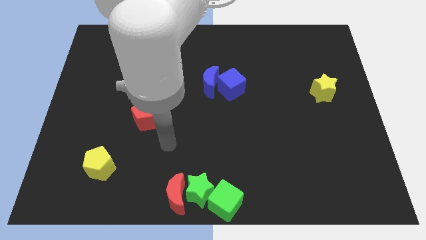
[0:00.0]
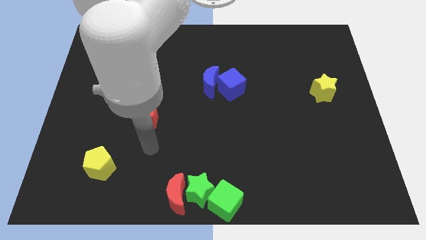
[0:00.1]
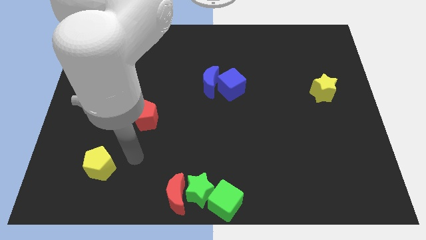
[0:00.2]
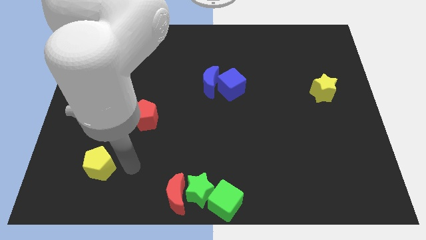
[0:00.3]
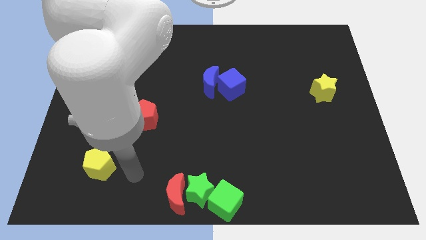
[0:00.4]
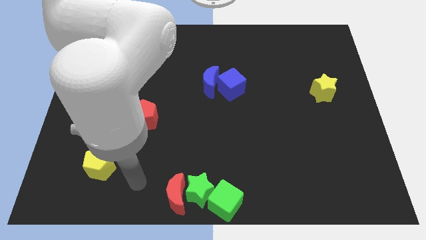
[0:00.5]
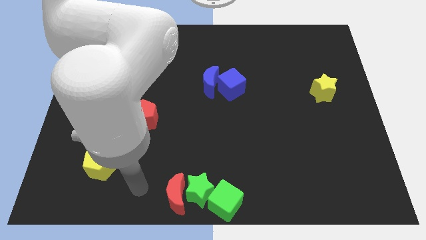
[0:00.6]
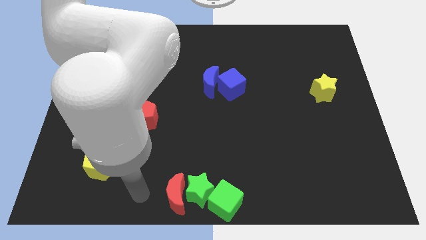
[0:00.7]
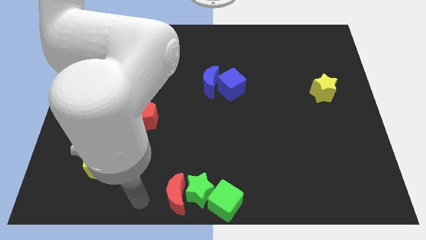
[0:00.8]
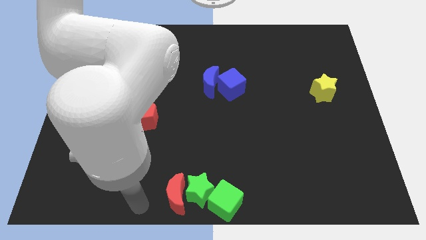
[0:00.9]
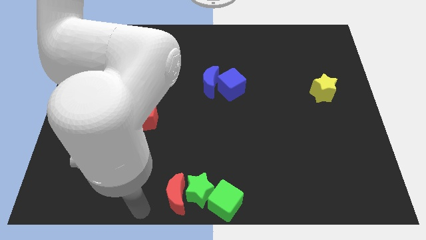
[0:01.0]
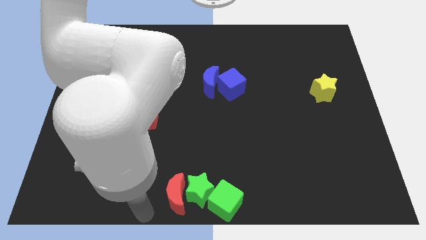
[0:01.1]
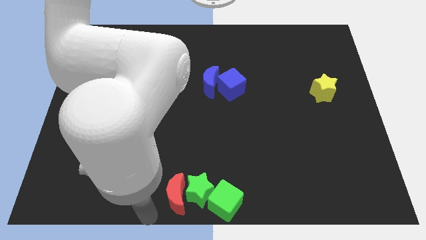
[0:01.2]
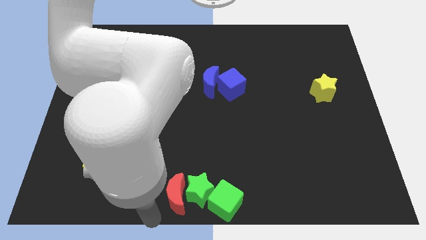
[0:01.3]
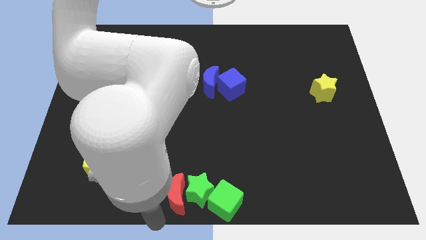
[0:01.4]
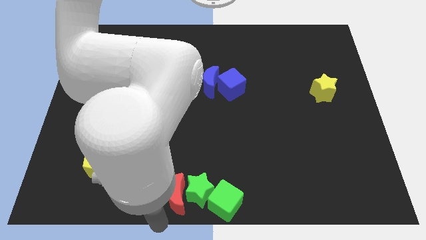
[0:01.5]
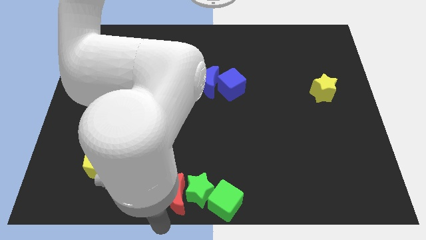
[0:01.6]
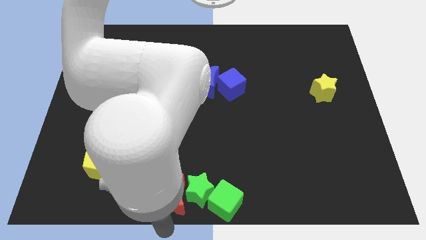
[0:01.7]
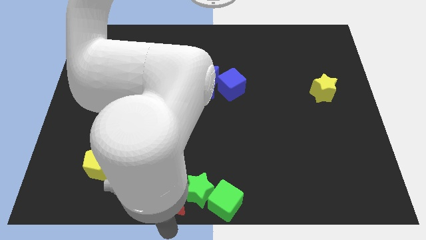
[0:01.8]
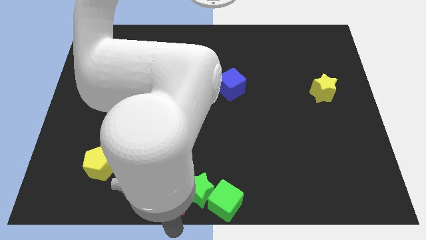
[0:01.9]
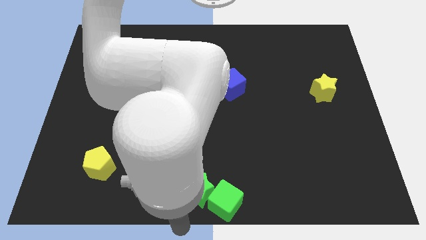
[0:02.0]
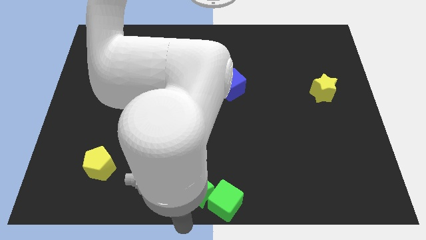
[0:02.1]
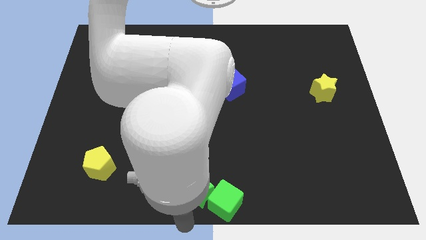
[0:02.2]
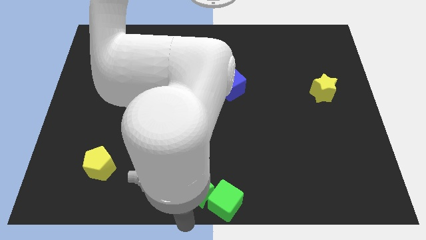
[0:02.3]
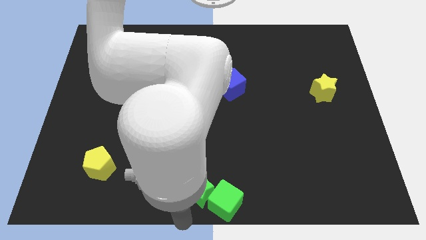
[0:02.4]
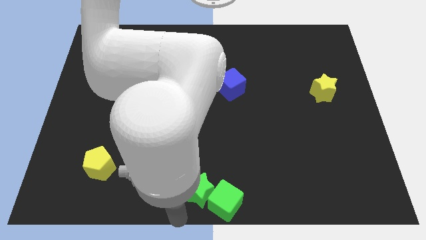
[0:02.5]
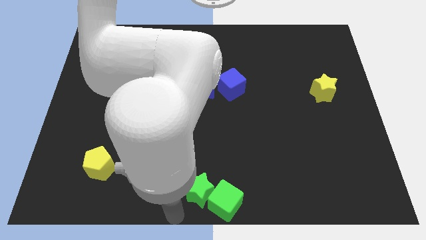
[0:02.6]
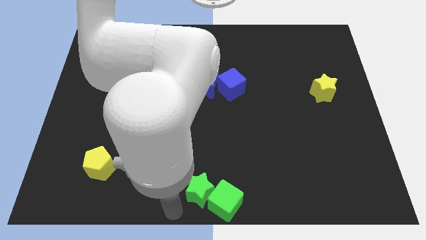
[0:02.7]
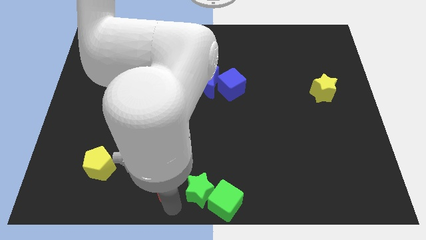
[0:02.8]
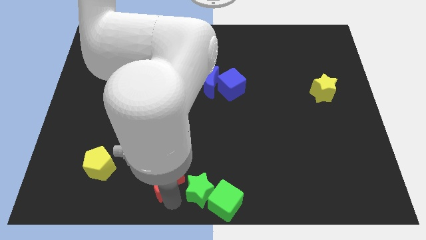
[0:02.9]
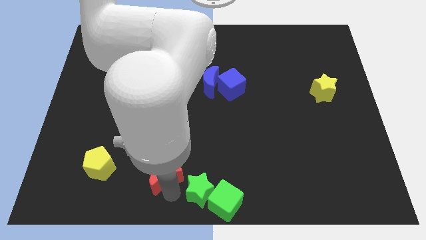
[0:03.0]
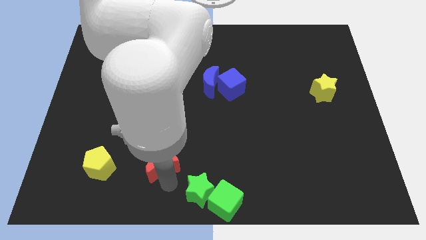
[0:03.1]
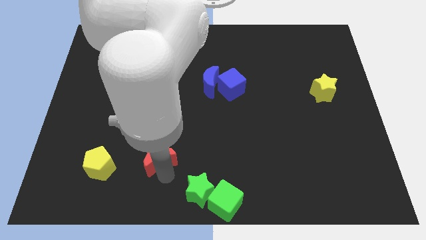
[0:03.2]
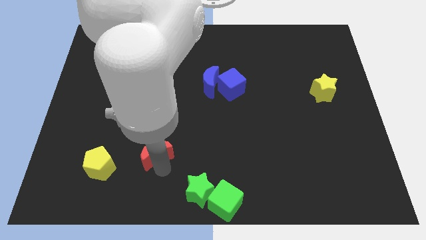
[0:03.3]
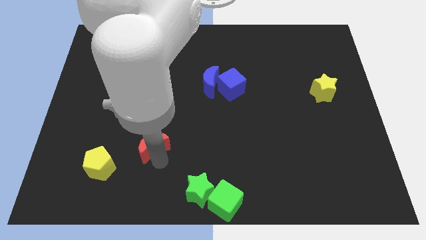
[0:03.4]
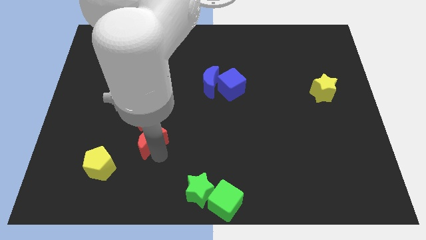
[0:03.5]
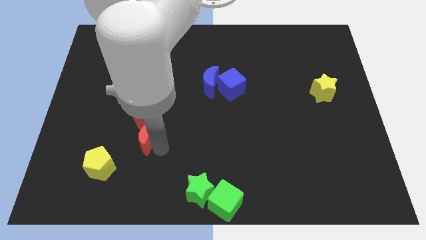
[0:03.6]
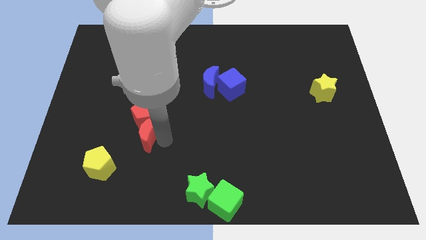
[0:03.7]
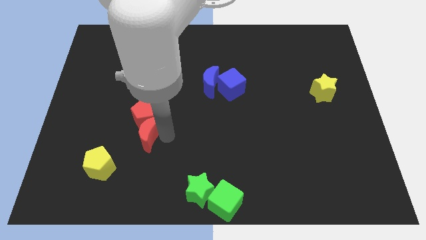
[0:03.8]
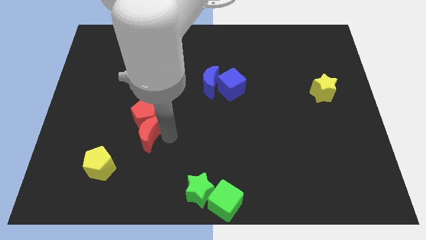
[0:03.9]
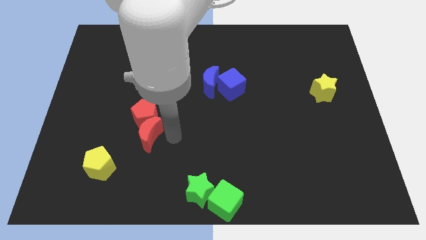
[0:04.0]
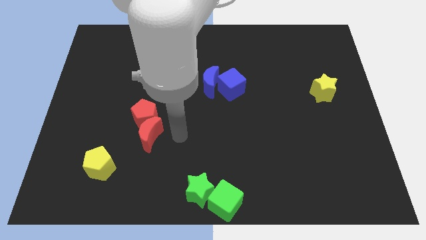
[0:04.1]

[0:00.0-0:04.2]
push the red crescent close to red pentagon

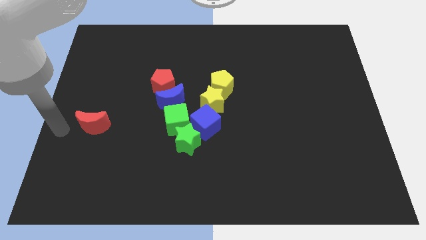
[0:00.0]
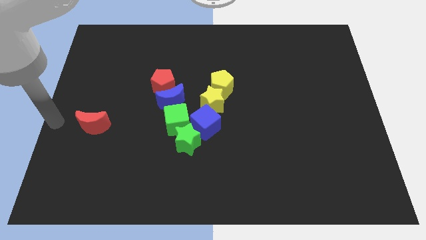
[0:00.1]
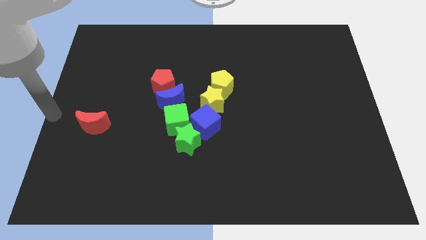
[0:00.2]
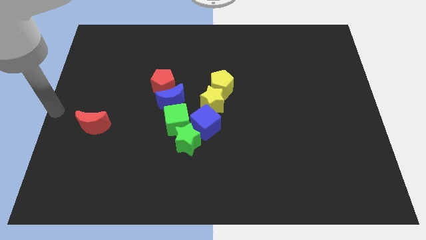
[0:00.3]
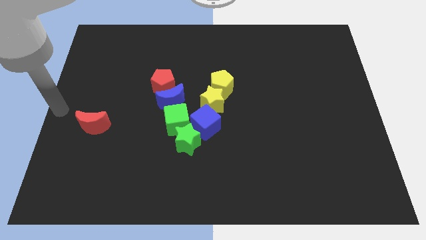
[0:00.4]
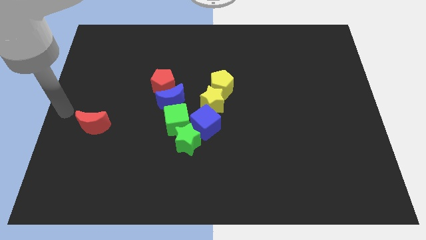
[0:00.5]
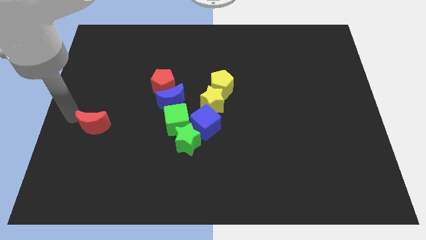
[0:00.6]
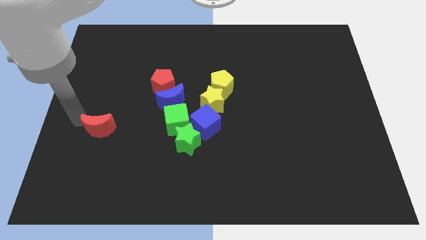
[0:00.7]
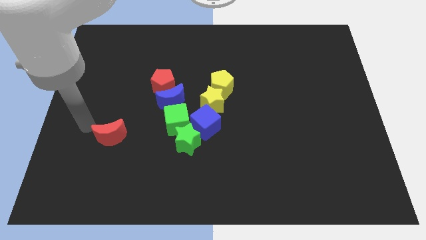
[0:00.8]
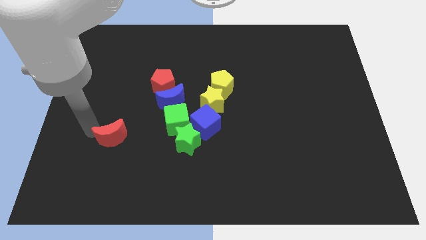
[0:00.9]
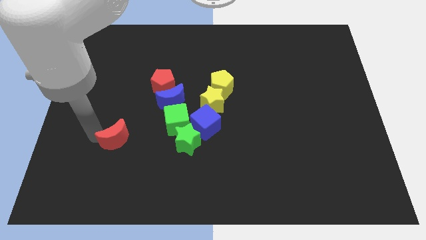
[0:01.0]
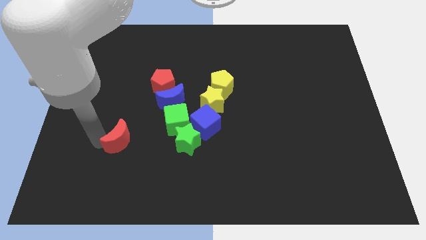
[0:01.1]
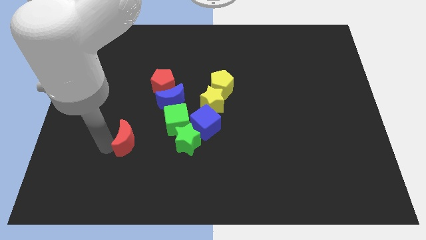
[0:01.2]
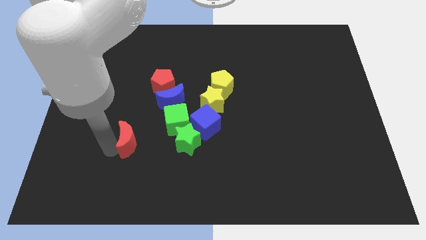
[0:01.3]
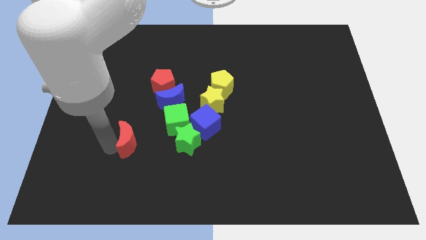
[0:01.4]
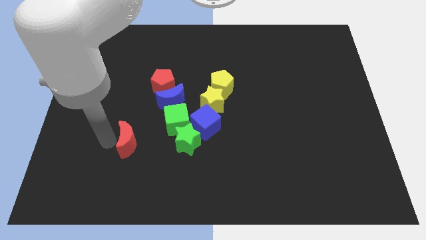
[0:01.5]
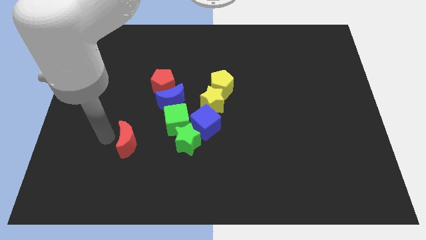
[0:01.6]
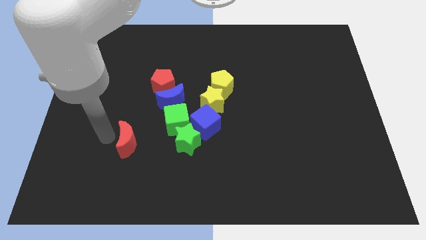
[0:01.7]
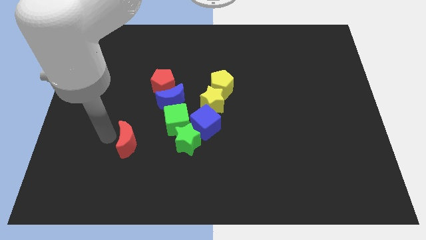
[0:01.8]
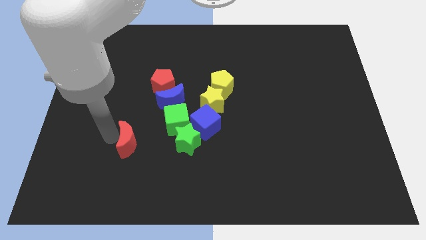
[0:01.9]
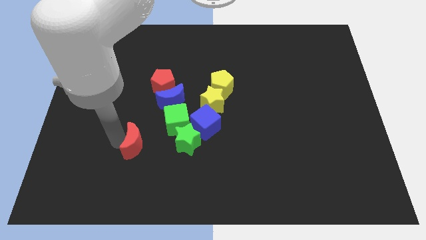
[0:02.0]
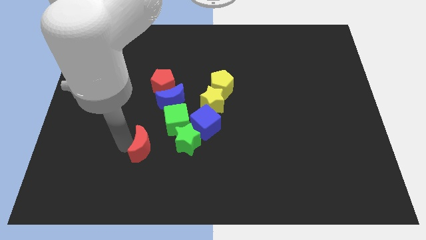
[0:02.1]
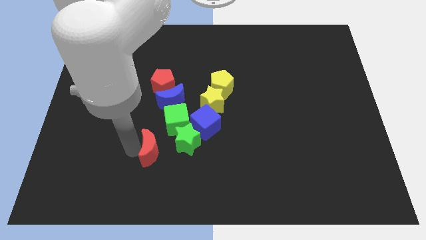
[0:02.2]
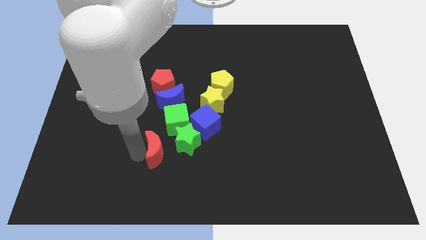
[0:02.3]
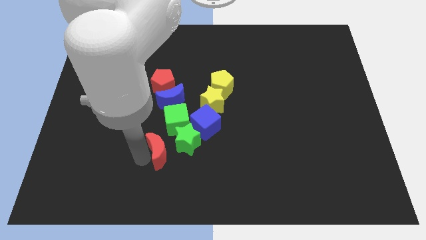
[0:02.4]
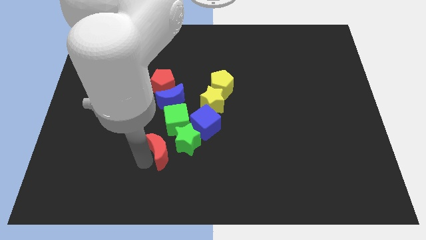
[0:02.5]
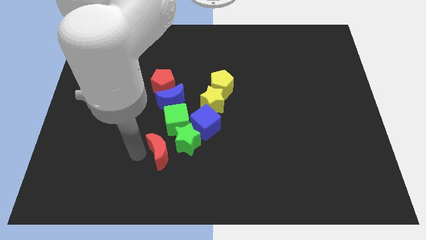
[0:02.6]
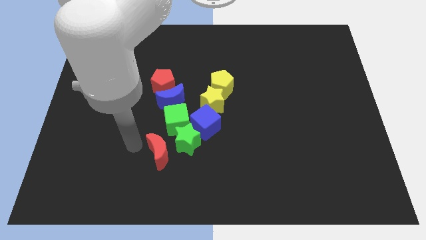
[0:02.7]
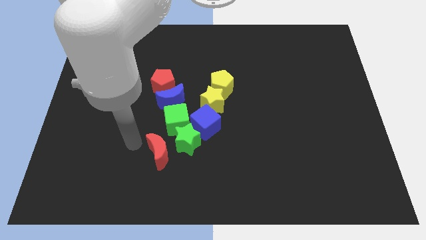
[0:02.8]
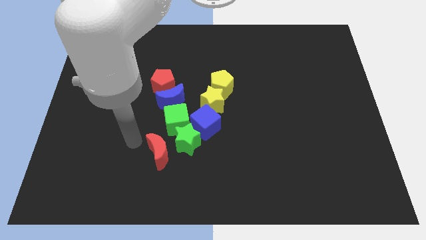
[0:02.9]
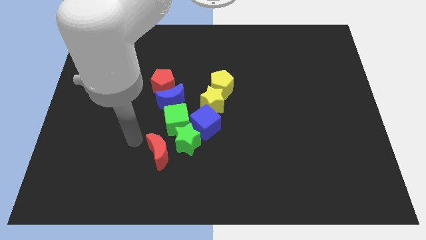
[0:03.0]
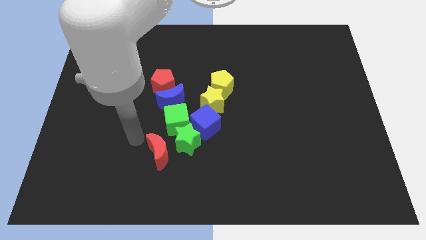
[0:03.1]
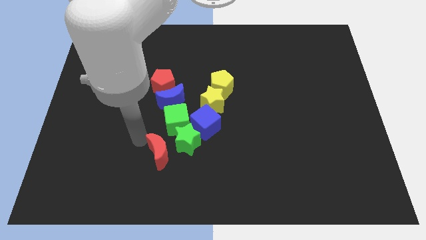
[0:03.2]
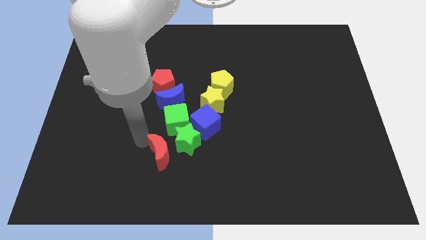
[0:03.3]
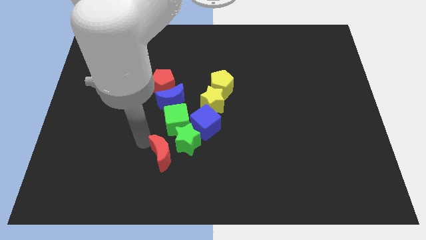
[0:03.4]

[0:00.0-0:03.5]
move the red crescent left to the green star

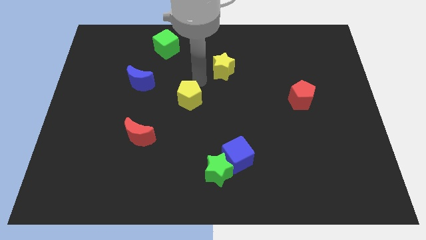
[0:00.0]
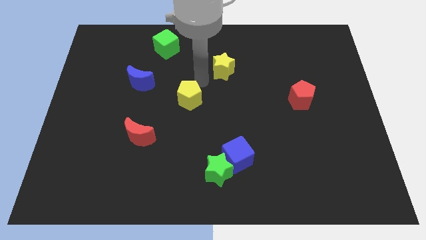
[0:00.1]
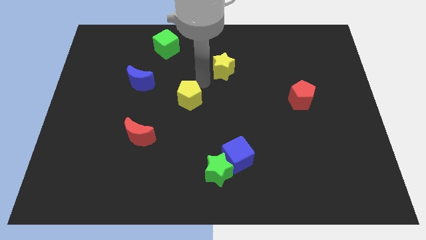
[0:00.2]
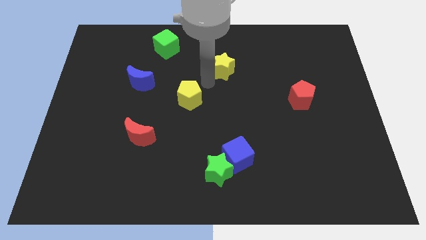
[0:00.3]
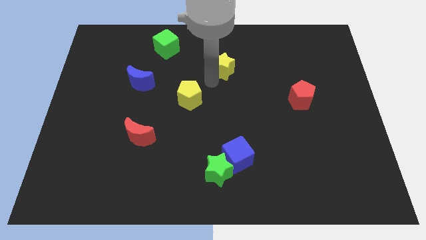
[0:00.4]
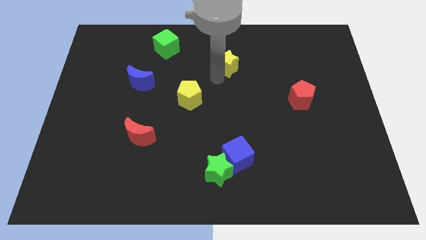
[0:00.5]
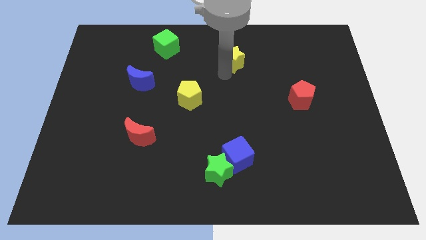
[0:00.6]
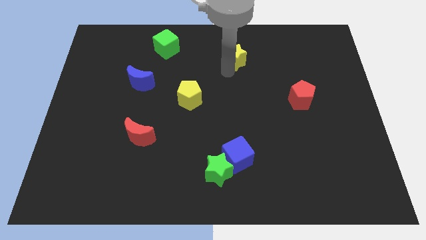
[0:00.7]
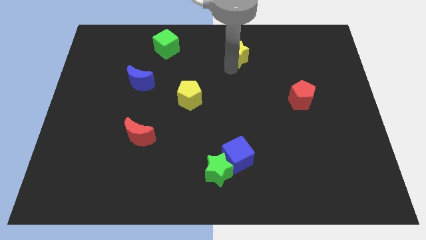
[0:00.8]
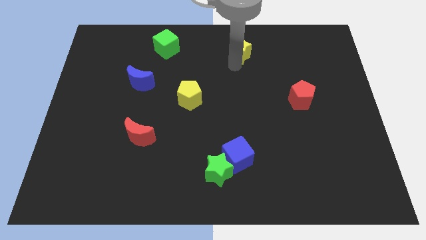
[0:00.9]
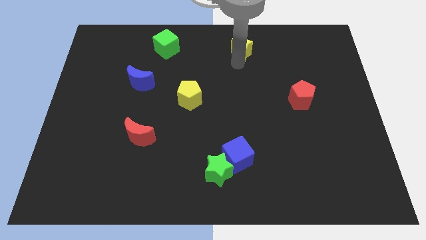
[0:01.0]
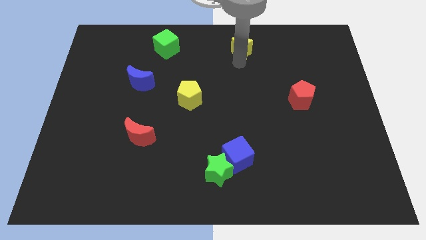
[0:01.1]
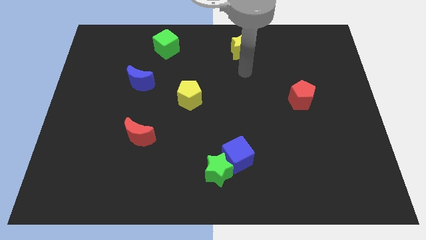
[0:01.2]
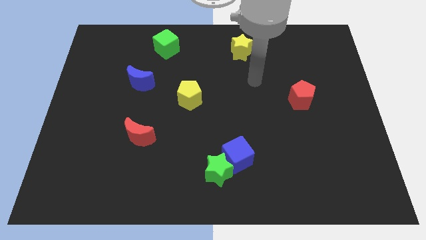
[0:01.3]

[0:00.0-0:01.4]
push the yellow star upwards

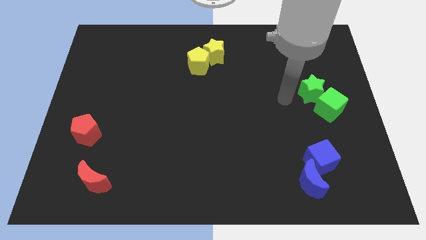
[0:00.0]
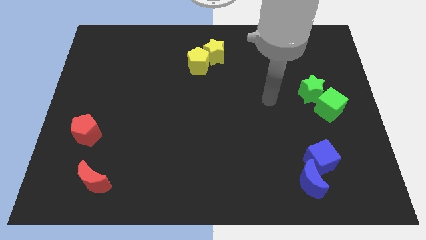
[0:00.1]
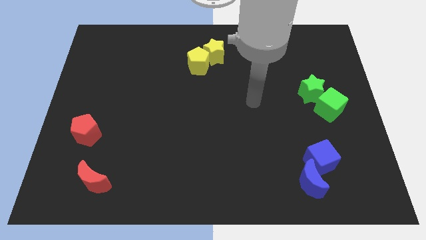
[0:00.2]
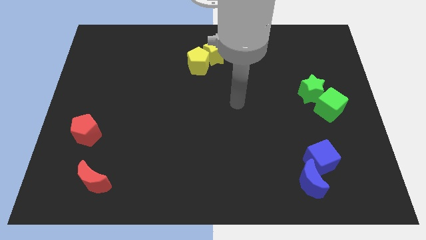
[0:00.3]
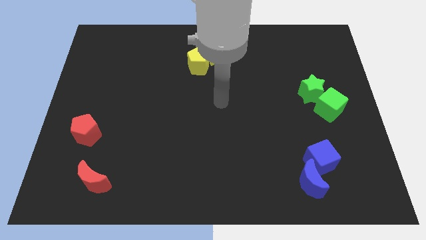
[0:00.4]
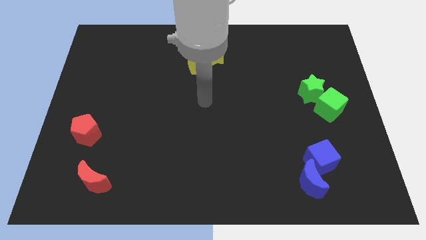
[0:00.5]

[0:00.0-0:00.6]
point your arm at the center of the board
